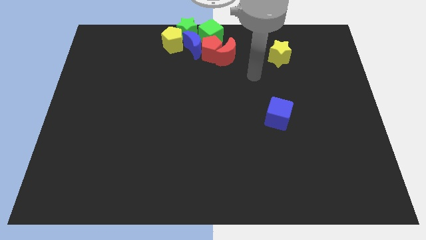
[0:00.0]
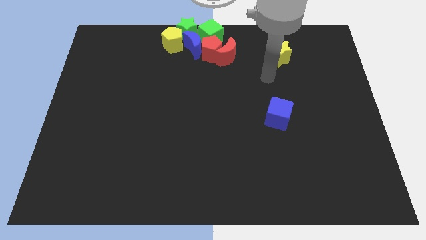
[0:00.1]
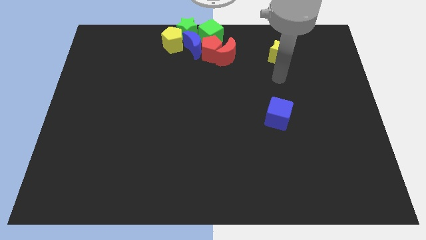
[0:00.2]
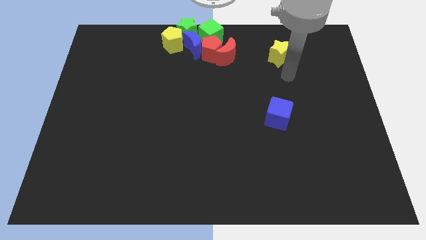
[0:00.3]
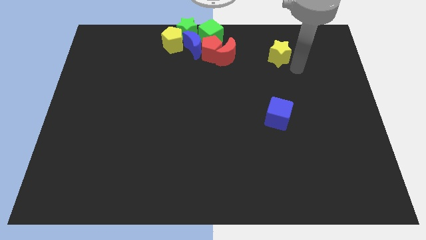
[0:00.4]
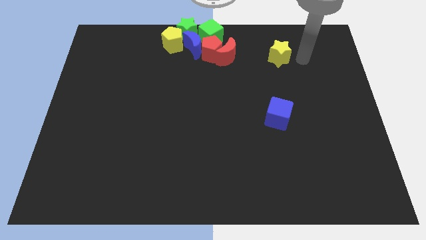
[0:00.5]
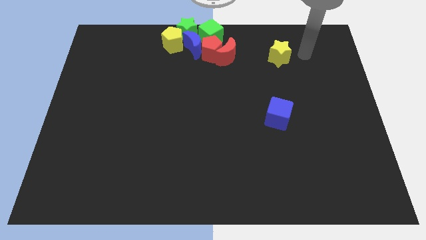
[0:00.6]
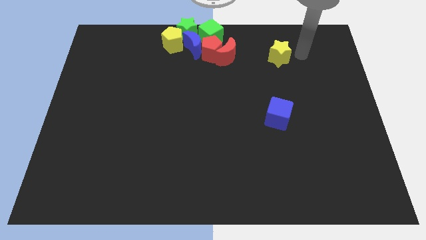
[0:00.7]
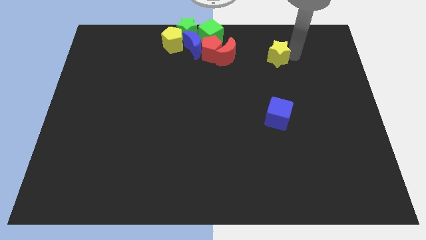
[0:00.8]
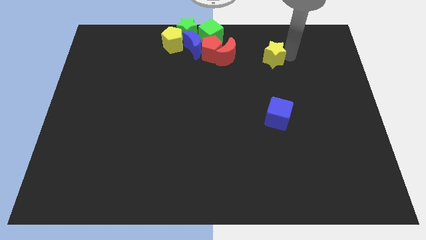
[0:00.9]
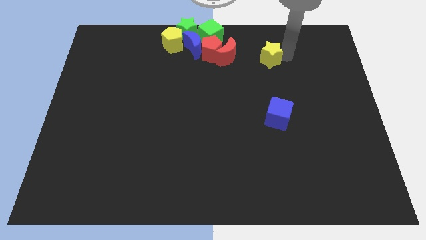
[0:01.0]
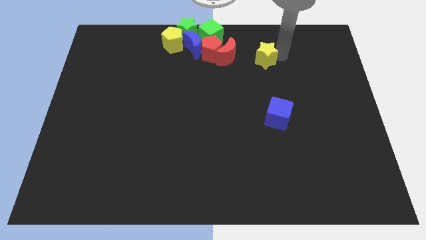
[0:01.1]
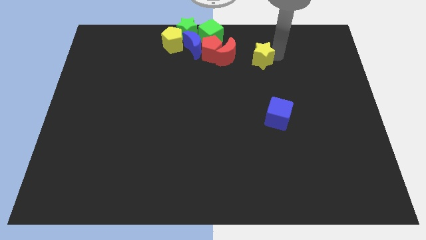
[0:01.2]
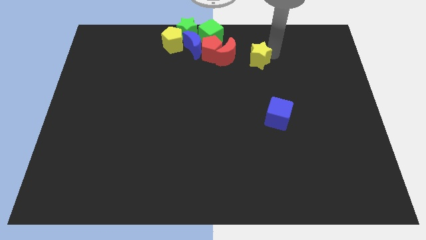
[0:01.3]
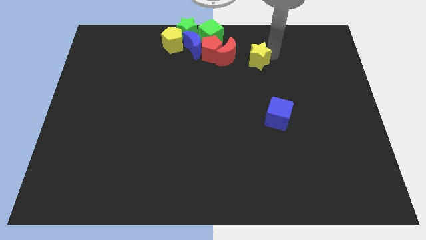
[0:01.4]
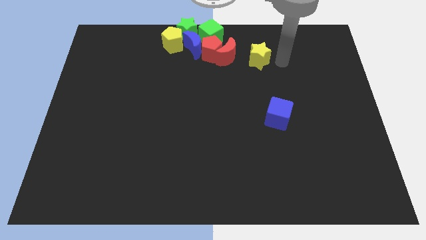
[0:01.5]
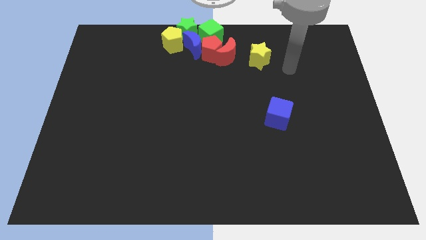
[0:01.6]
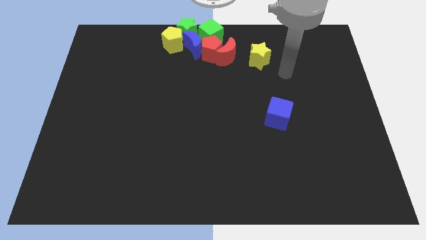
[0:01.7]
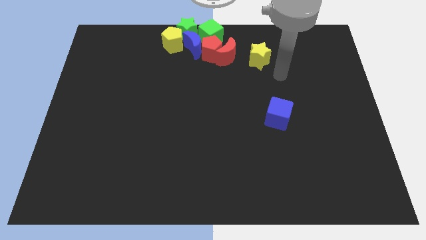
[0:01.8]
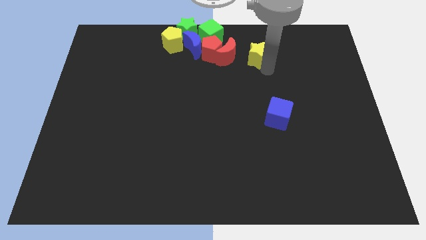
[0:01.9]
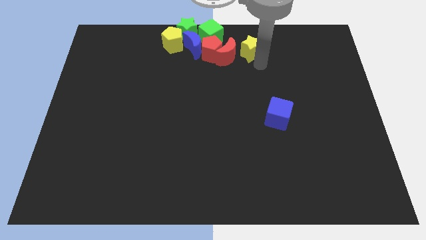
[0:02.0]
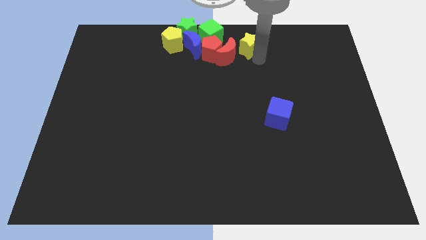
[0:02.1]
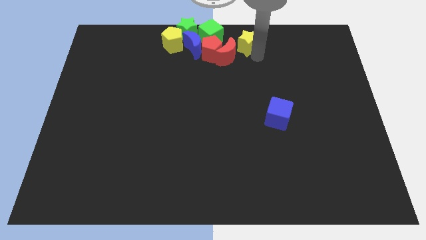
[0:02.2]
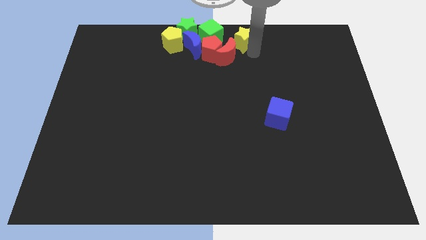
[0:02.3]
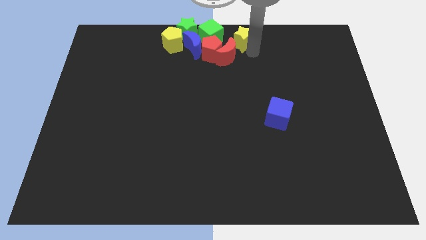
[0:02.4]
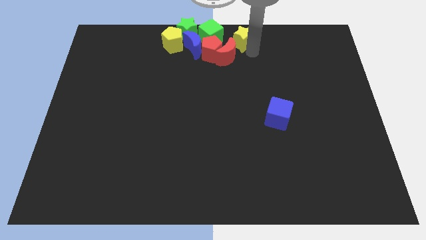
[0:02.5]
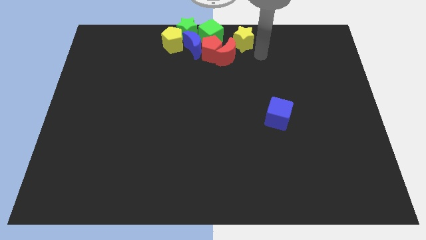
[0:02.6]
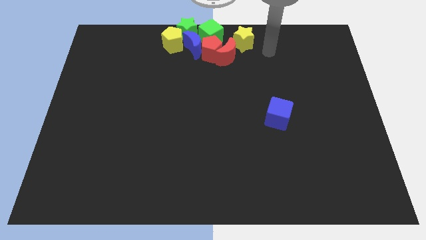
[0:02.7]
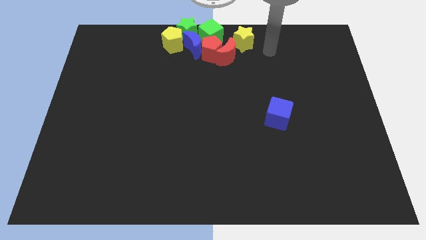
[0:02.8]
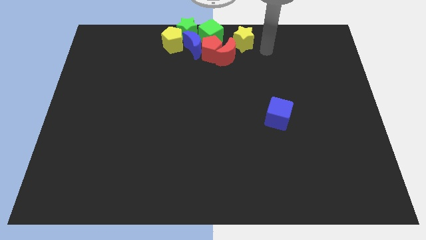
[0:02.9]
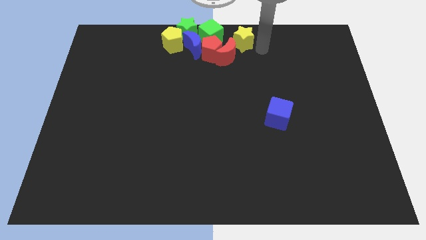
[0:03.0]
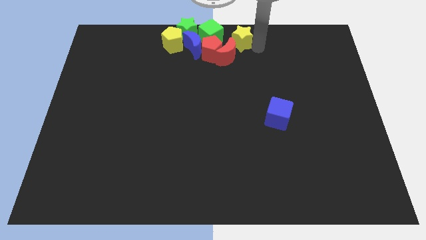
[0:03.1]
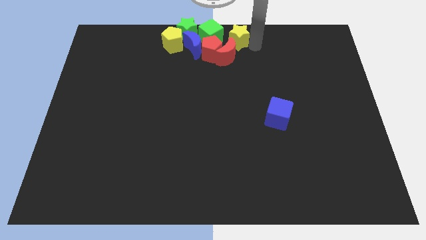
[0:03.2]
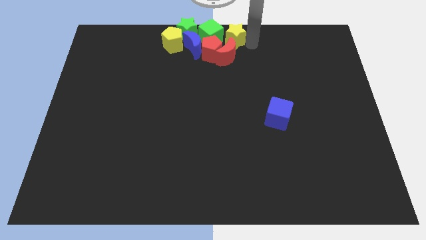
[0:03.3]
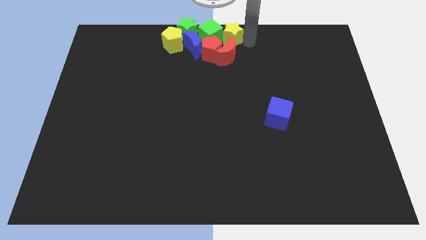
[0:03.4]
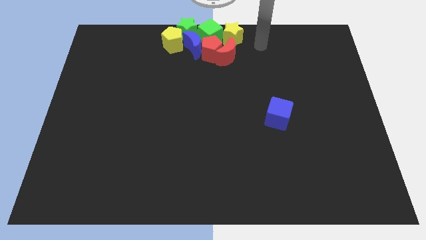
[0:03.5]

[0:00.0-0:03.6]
move the yellow star into the green cube

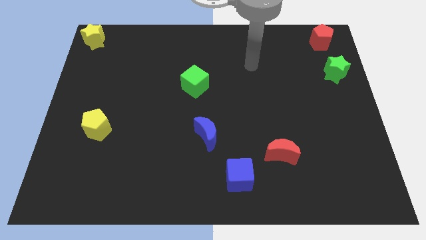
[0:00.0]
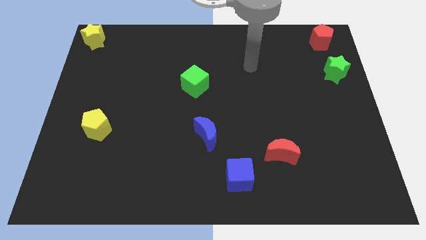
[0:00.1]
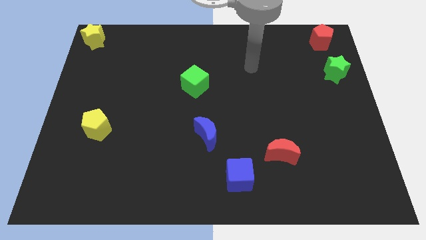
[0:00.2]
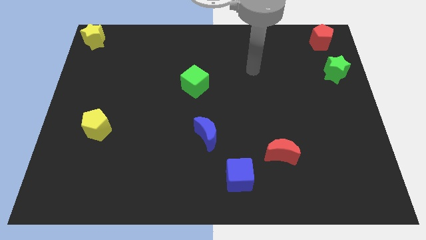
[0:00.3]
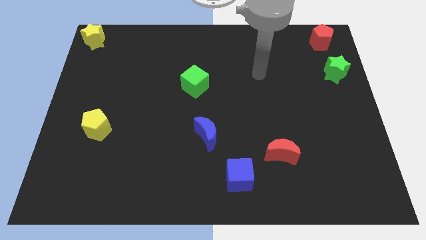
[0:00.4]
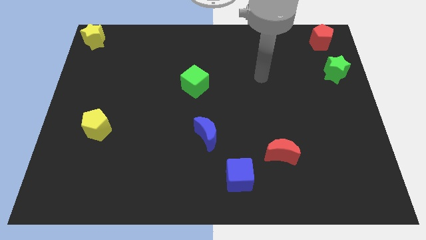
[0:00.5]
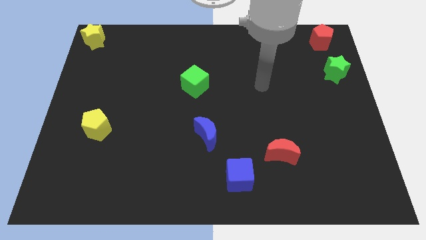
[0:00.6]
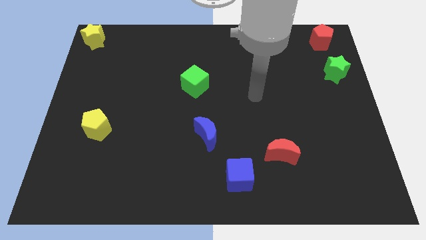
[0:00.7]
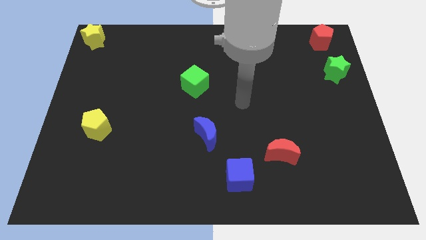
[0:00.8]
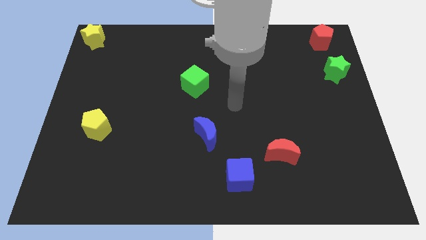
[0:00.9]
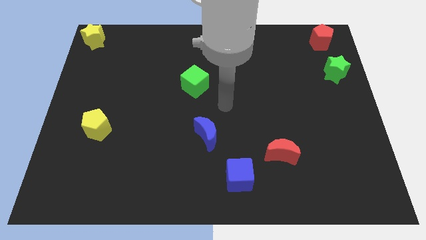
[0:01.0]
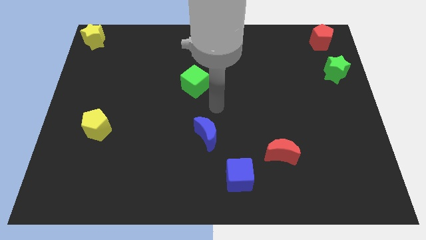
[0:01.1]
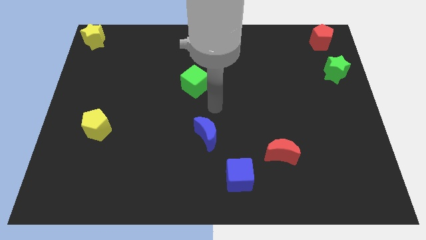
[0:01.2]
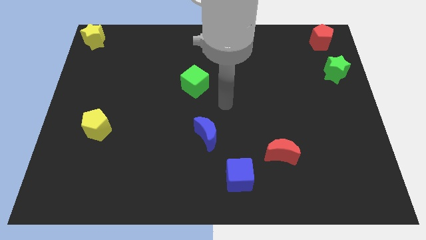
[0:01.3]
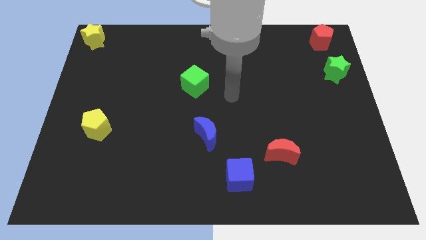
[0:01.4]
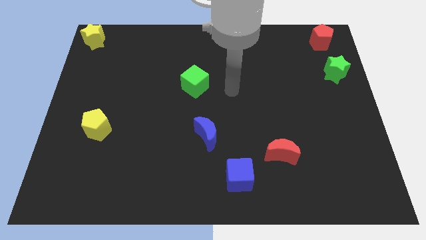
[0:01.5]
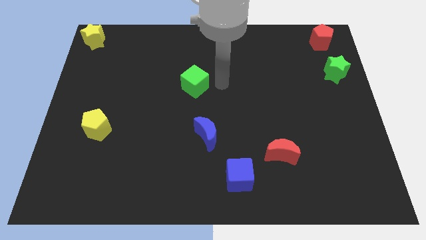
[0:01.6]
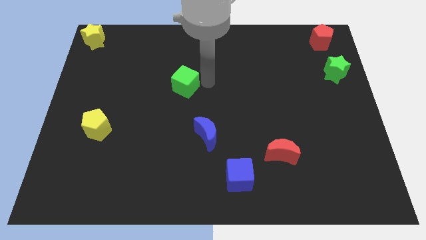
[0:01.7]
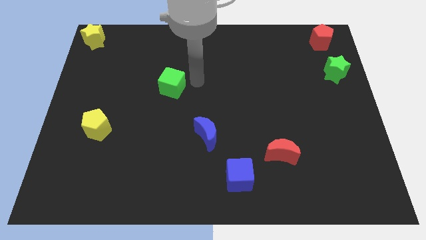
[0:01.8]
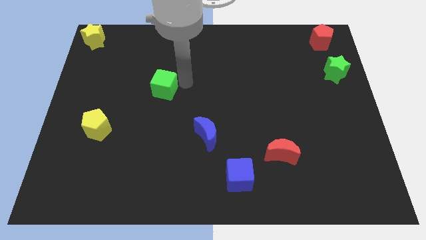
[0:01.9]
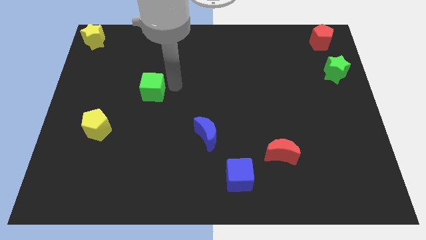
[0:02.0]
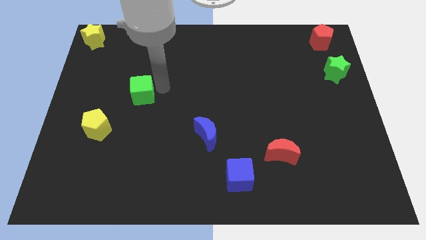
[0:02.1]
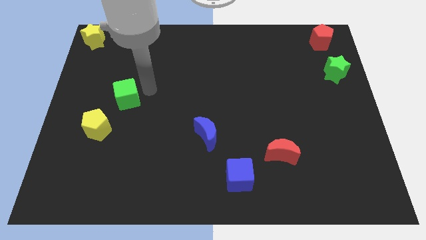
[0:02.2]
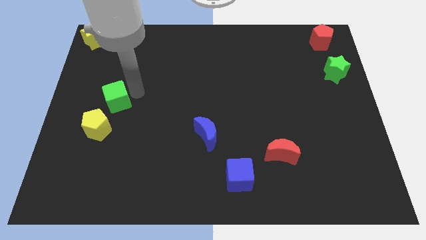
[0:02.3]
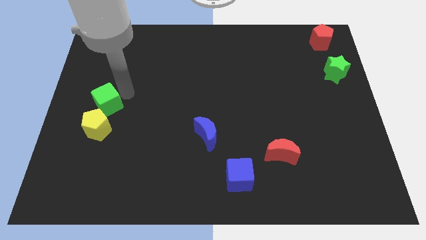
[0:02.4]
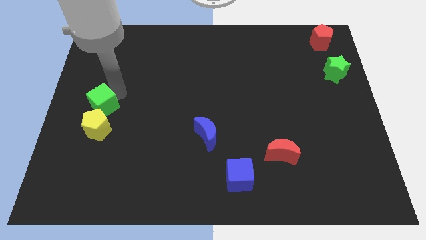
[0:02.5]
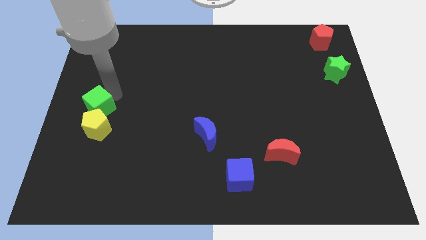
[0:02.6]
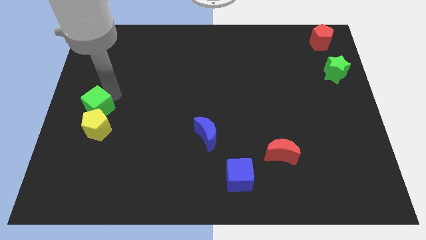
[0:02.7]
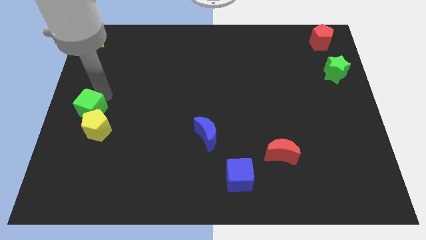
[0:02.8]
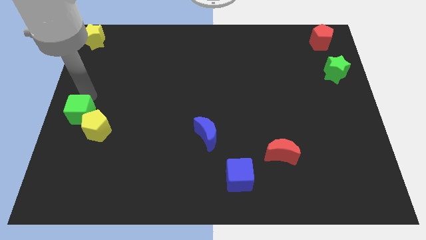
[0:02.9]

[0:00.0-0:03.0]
push the green cube to the top of the yellow pentagon

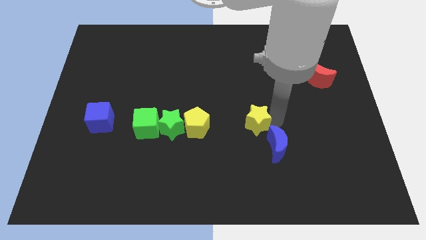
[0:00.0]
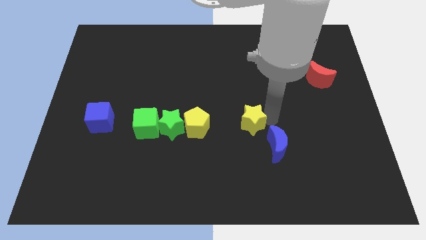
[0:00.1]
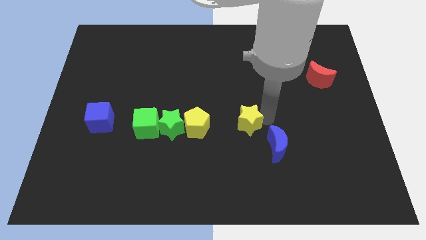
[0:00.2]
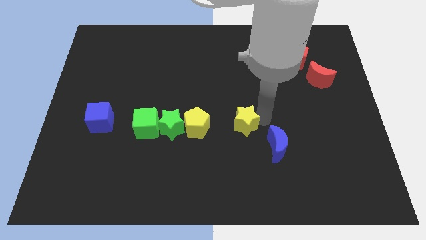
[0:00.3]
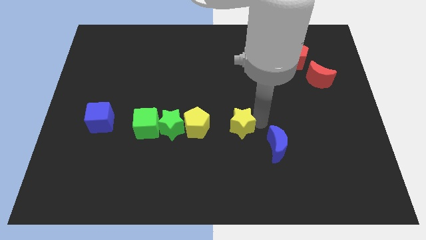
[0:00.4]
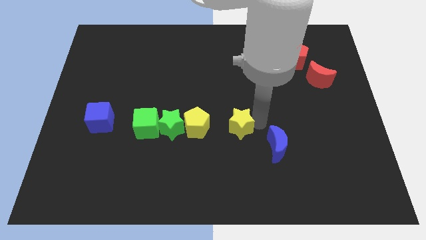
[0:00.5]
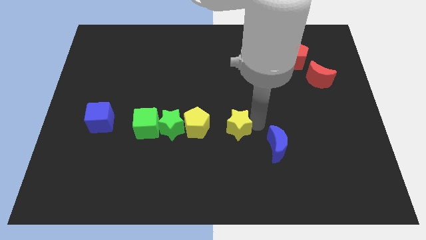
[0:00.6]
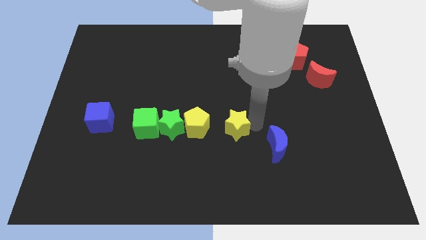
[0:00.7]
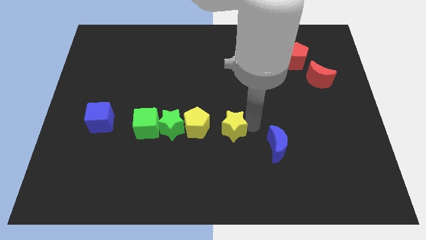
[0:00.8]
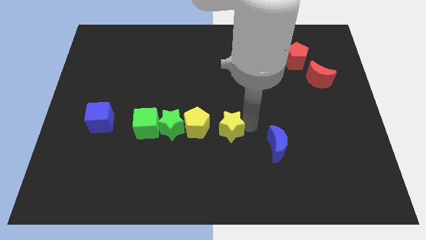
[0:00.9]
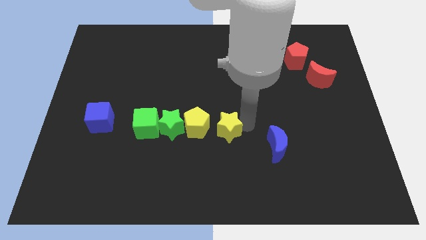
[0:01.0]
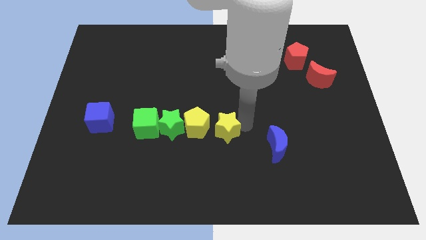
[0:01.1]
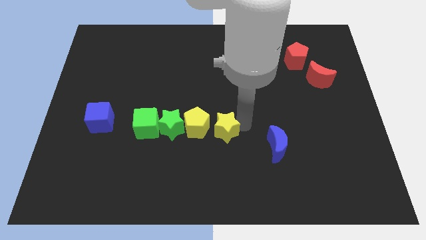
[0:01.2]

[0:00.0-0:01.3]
push the yellow star towards the right to the yellow pentagon

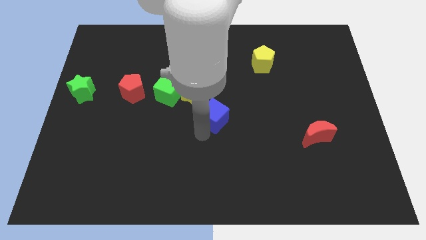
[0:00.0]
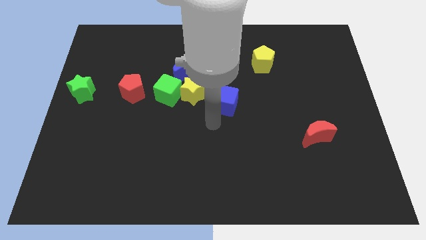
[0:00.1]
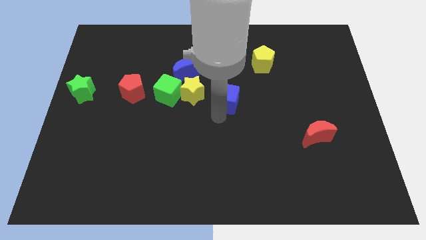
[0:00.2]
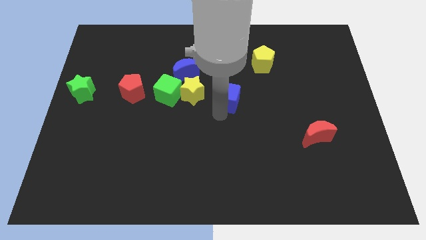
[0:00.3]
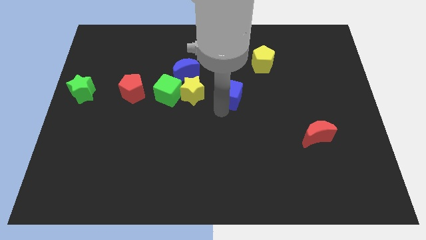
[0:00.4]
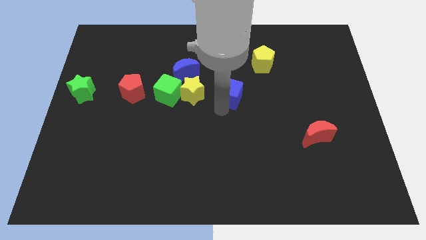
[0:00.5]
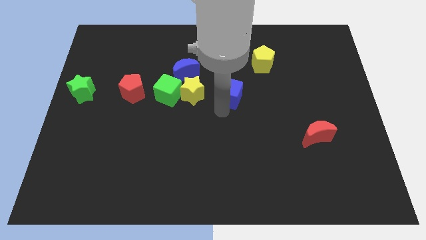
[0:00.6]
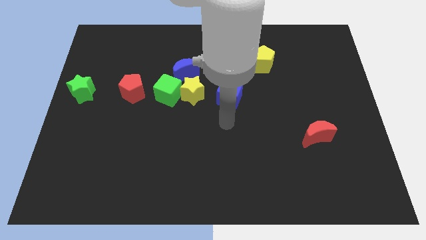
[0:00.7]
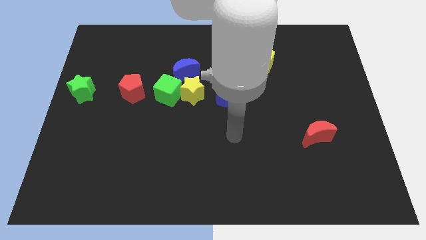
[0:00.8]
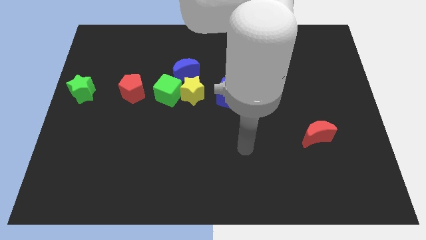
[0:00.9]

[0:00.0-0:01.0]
place the blue cube to the right side of the yellow star

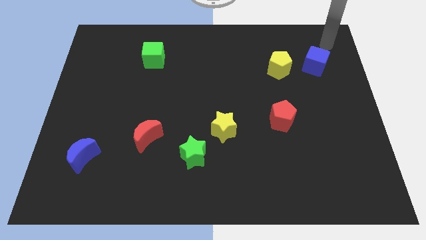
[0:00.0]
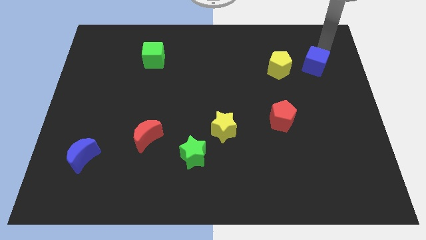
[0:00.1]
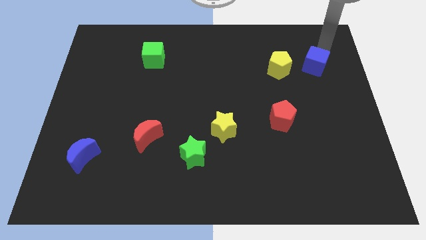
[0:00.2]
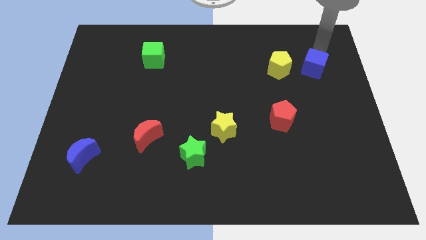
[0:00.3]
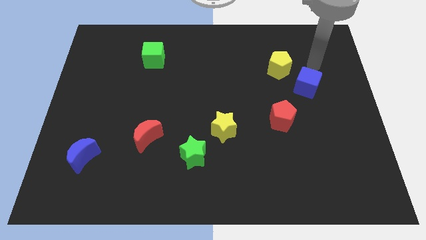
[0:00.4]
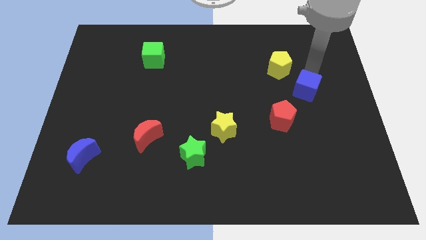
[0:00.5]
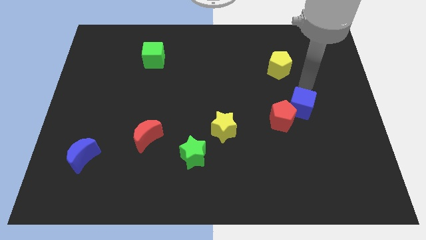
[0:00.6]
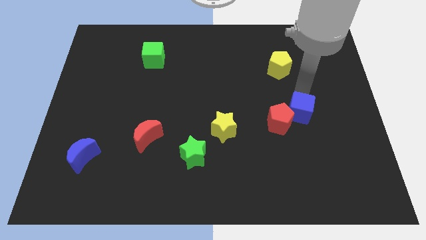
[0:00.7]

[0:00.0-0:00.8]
push the blue cube into the red pentagon
